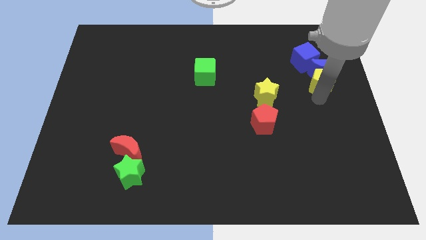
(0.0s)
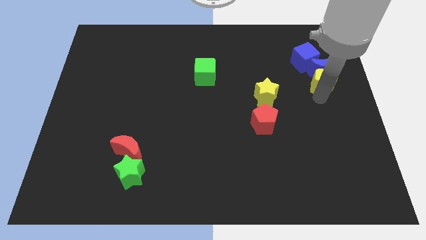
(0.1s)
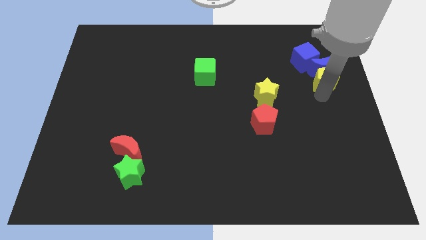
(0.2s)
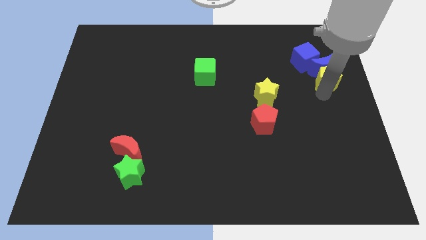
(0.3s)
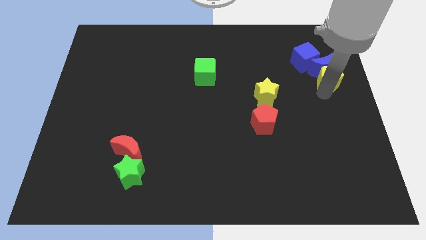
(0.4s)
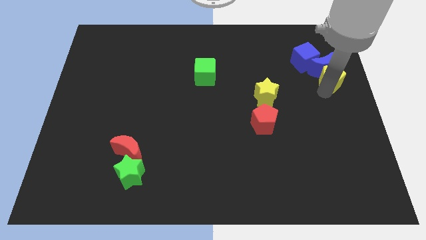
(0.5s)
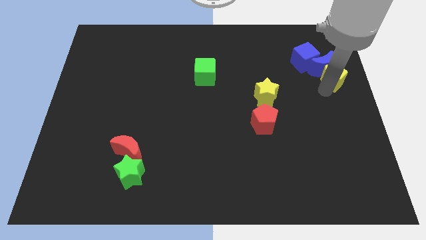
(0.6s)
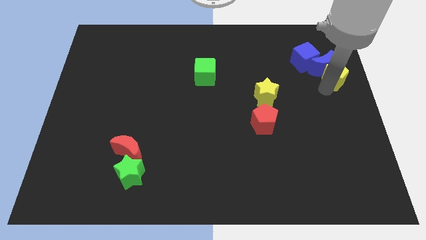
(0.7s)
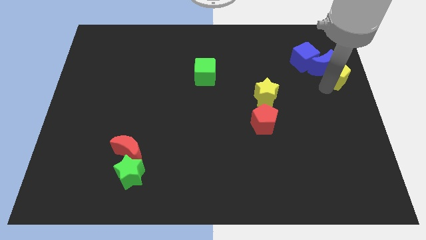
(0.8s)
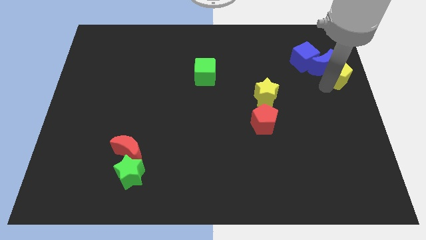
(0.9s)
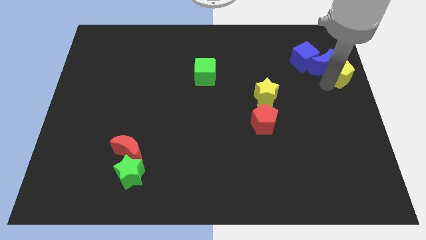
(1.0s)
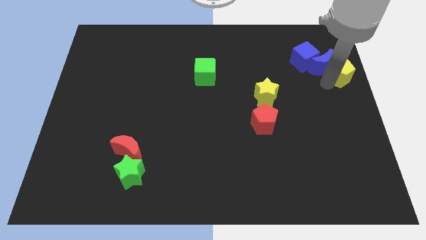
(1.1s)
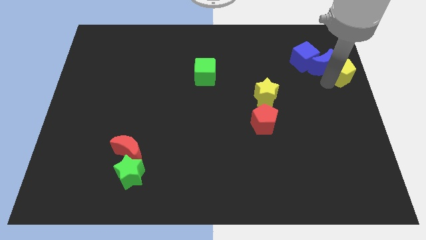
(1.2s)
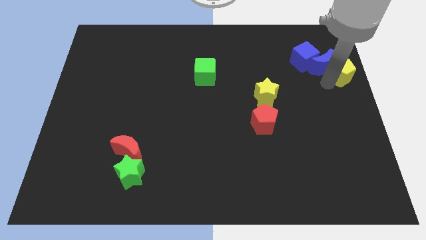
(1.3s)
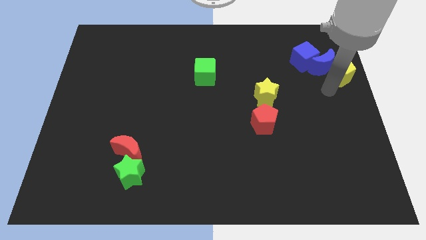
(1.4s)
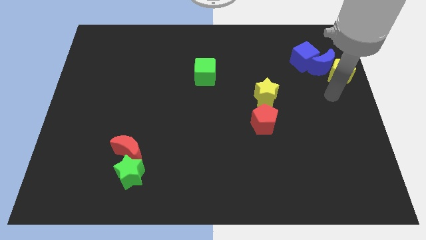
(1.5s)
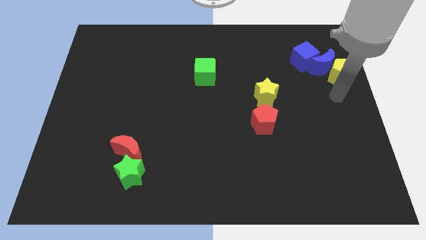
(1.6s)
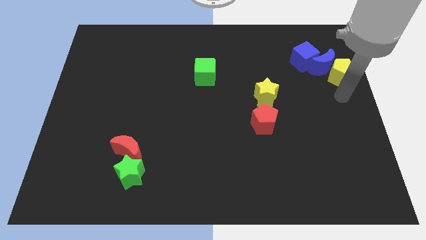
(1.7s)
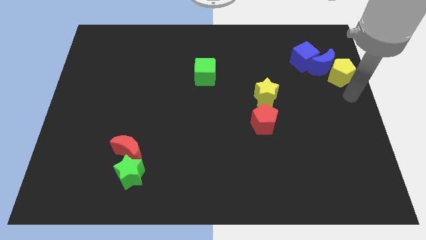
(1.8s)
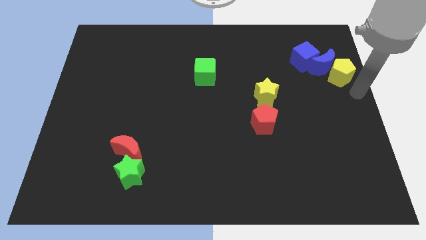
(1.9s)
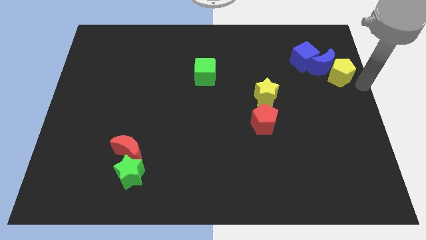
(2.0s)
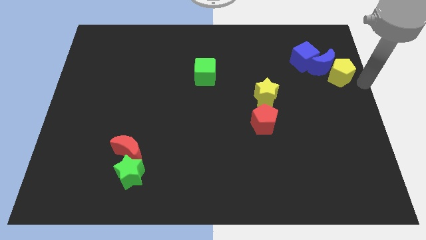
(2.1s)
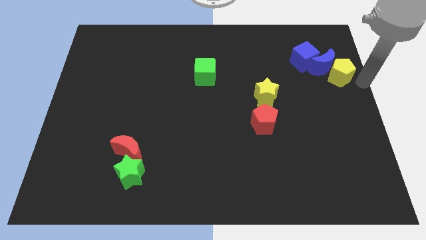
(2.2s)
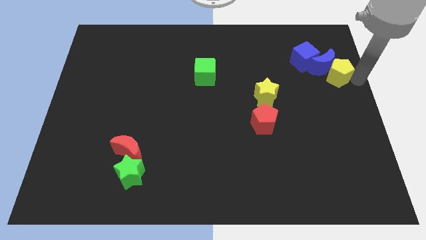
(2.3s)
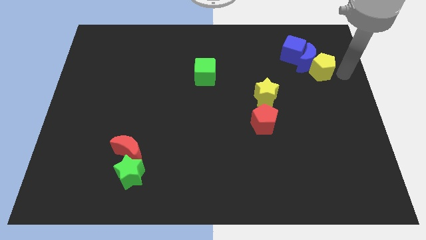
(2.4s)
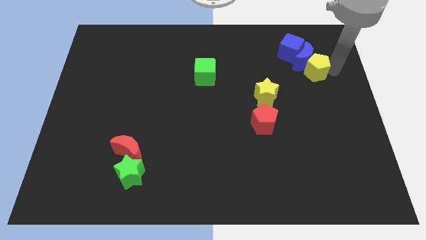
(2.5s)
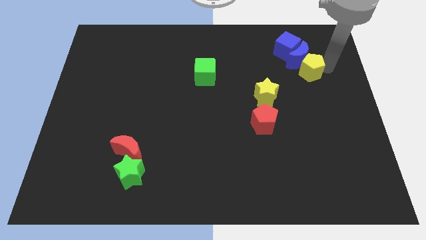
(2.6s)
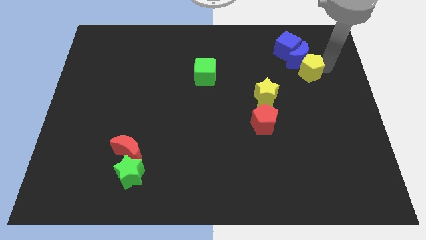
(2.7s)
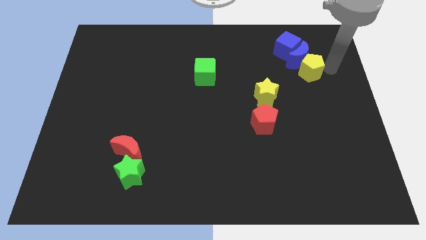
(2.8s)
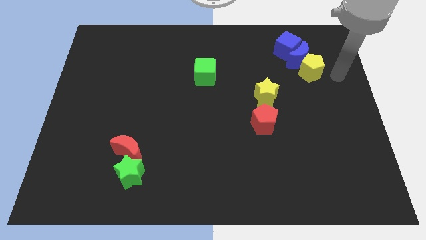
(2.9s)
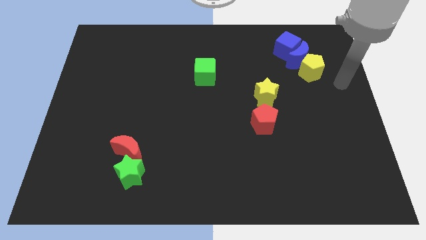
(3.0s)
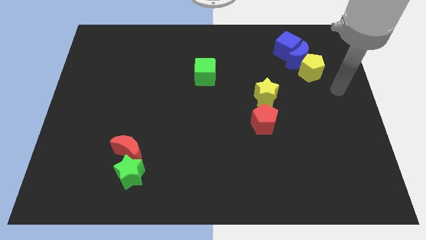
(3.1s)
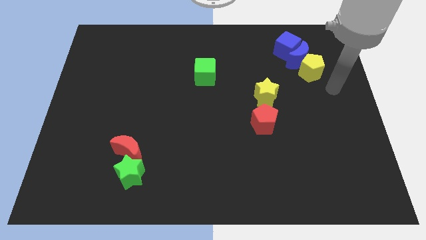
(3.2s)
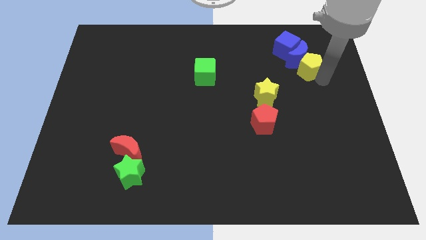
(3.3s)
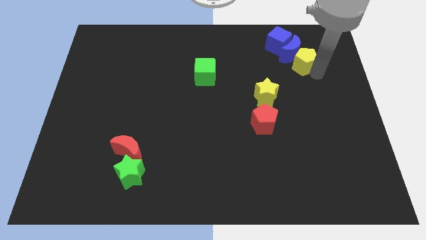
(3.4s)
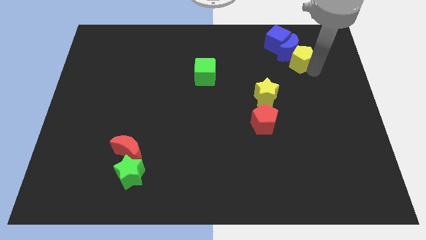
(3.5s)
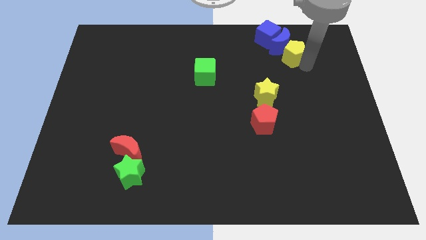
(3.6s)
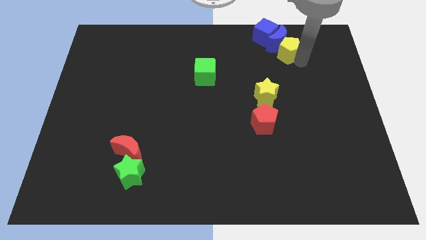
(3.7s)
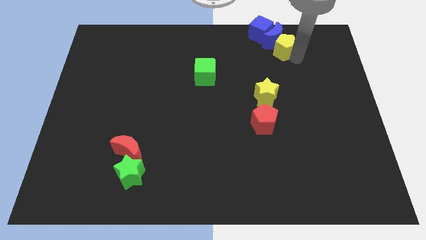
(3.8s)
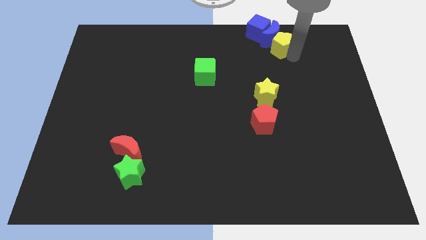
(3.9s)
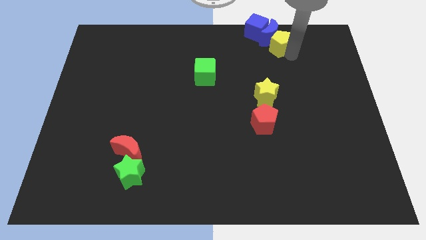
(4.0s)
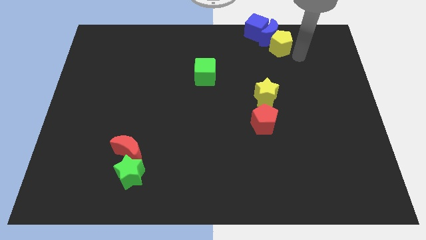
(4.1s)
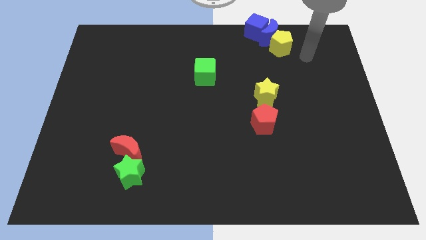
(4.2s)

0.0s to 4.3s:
move the blue cube blue crescent and yellow pentagon towards the top

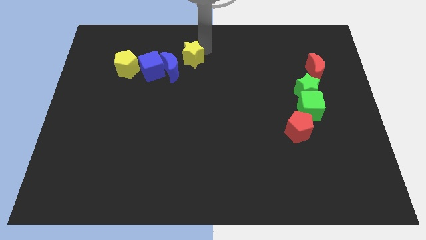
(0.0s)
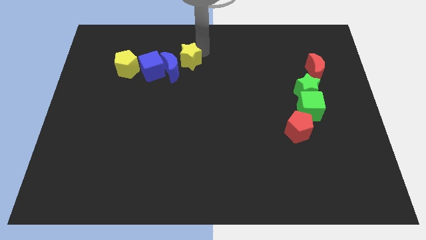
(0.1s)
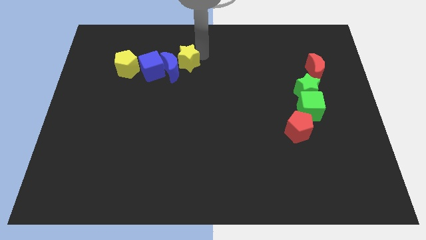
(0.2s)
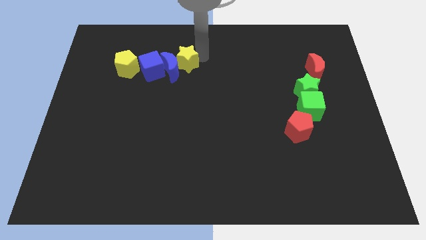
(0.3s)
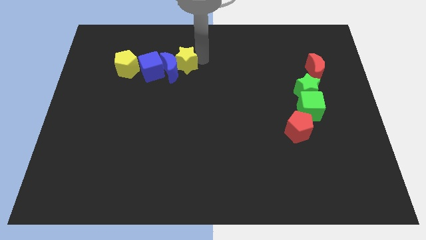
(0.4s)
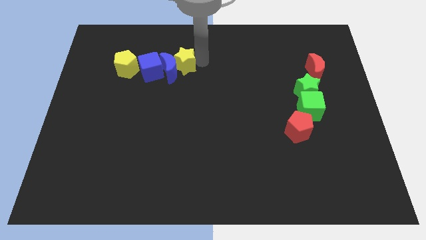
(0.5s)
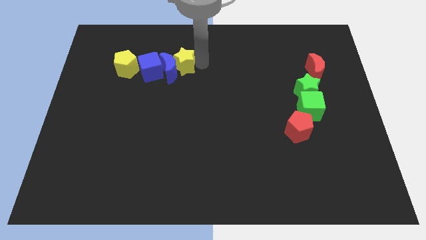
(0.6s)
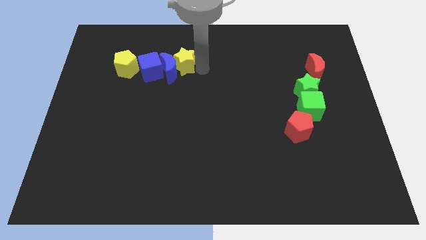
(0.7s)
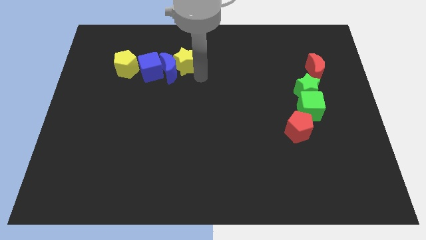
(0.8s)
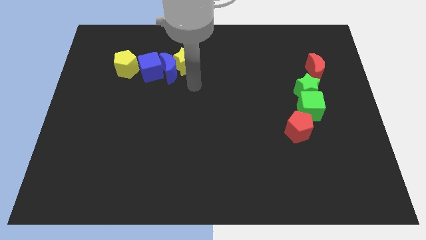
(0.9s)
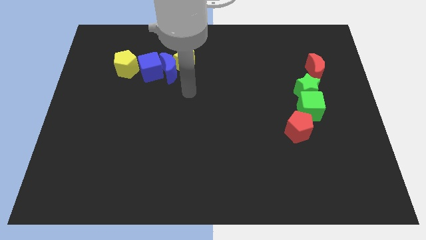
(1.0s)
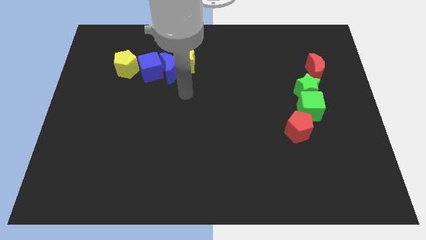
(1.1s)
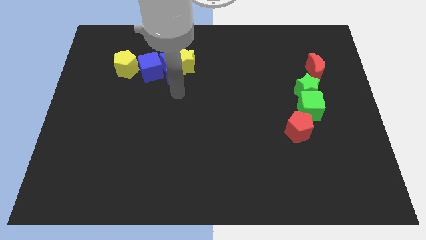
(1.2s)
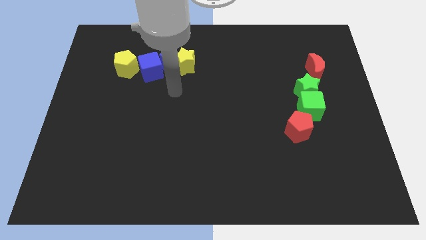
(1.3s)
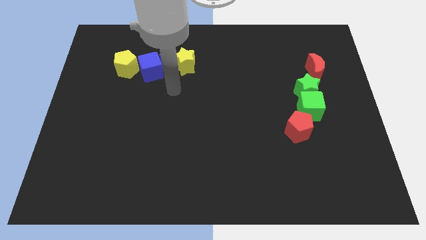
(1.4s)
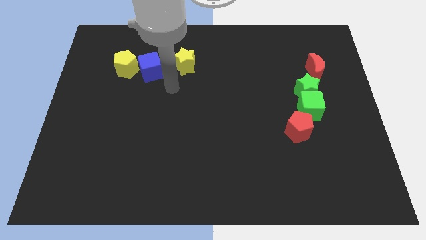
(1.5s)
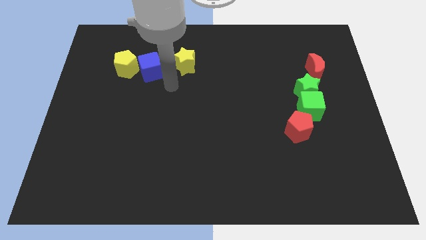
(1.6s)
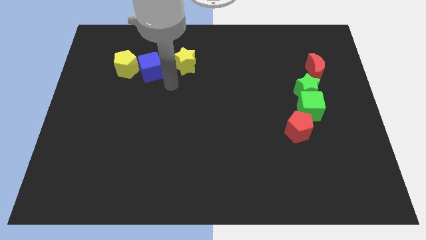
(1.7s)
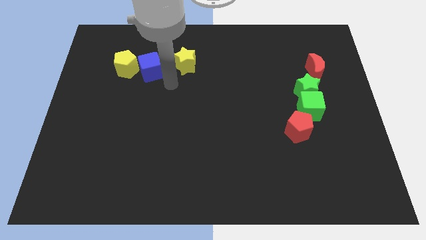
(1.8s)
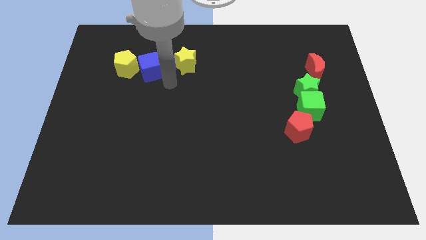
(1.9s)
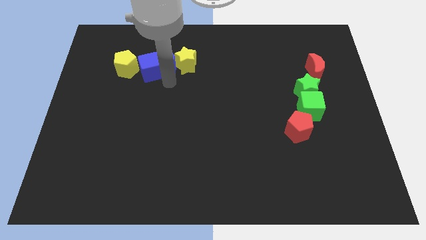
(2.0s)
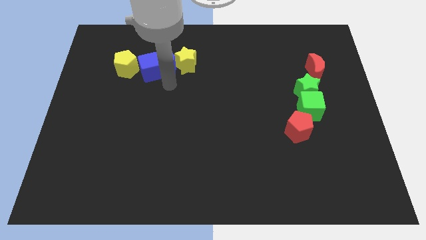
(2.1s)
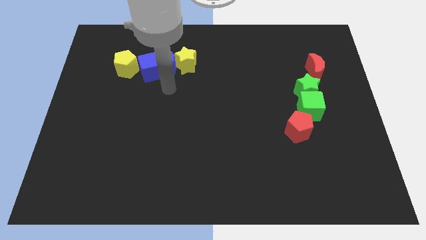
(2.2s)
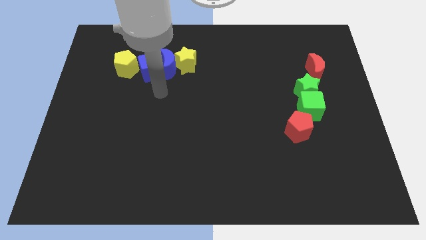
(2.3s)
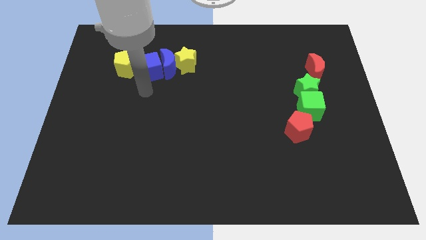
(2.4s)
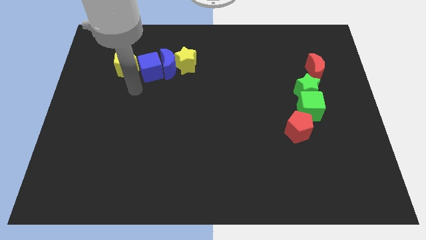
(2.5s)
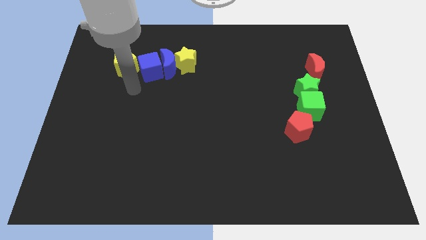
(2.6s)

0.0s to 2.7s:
move your arm from the yellow star to the bottom of the yellow pentagon

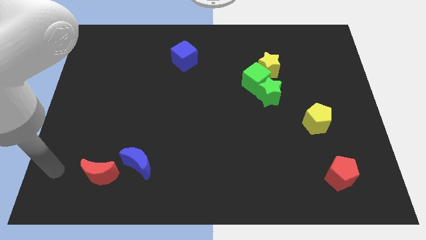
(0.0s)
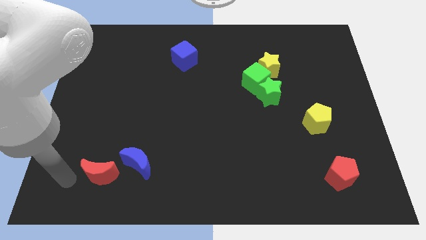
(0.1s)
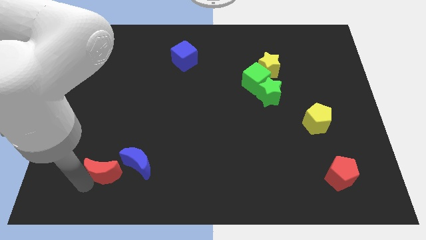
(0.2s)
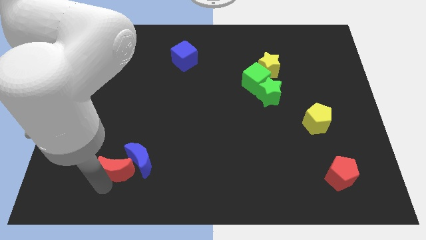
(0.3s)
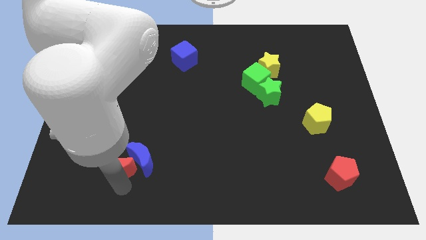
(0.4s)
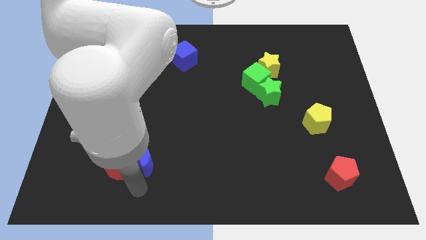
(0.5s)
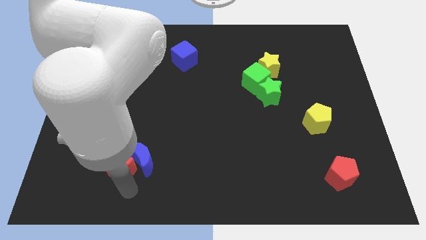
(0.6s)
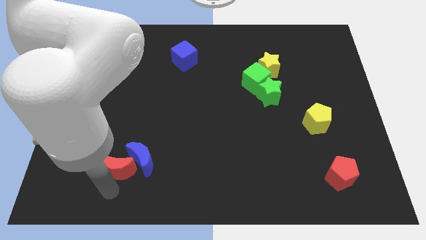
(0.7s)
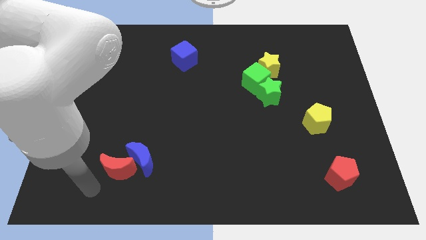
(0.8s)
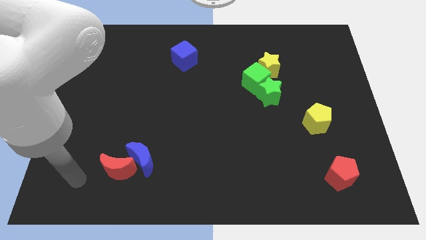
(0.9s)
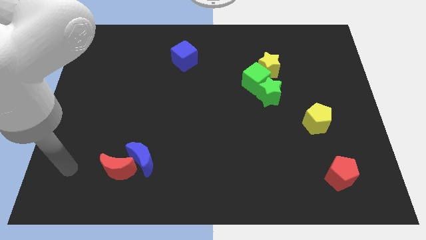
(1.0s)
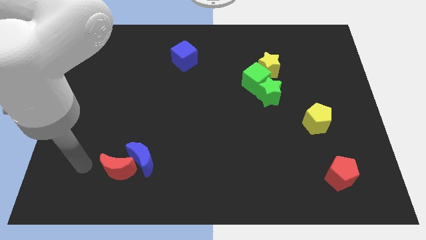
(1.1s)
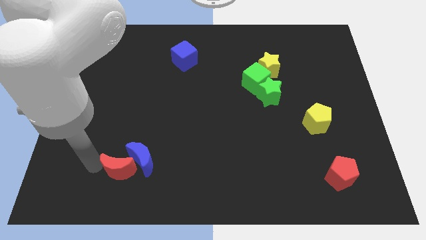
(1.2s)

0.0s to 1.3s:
push the red moon into the blue crescent

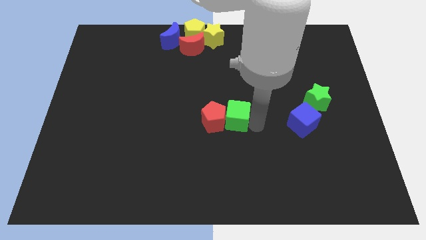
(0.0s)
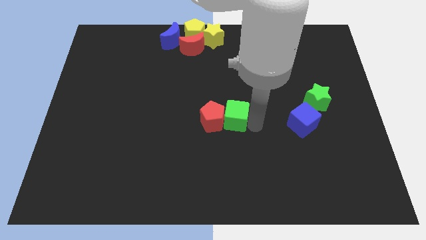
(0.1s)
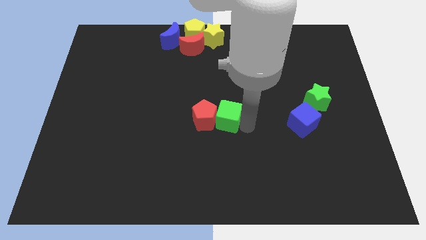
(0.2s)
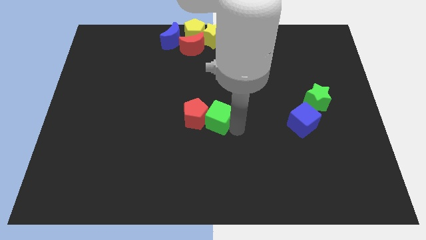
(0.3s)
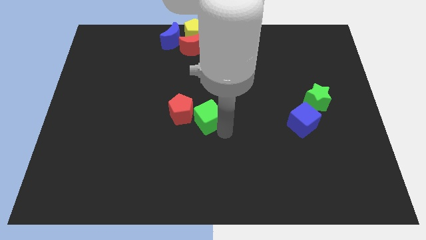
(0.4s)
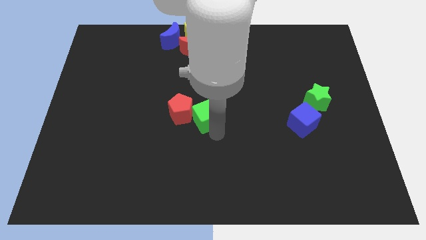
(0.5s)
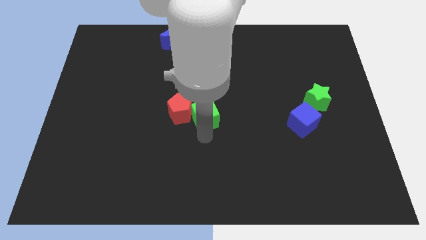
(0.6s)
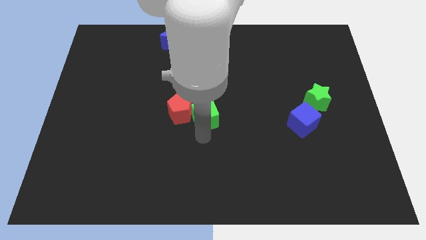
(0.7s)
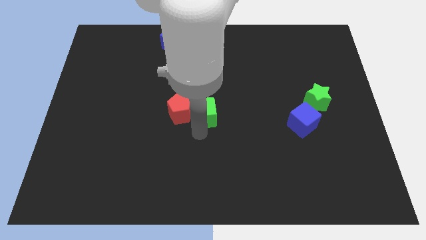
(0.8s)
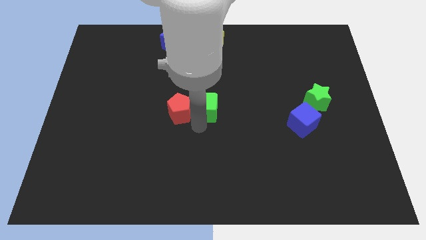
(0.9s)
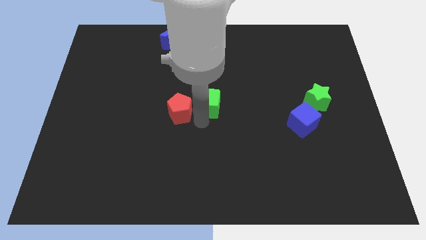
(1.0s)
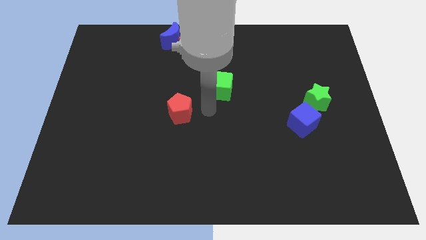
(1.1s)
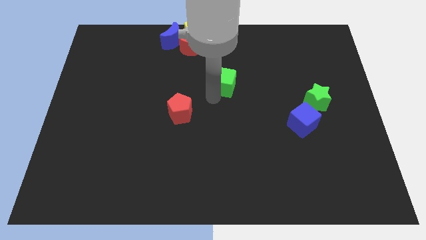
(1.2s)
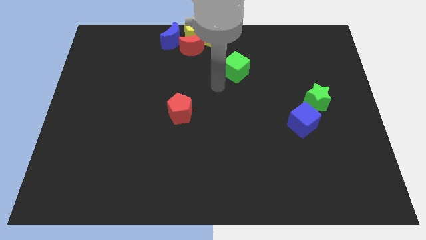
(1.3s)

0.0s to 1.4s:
push green cube towards top of the board
